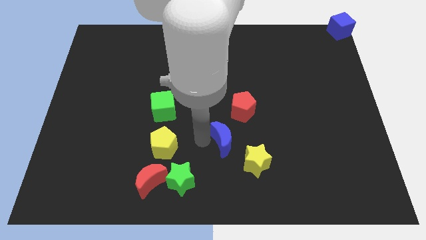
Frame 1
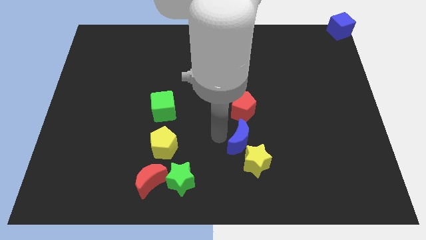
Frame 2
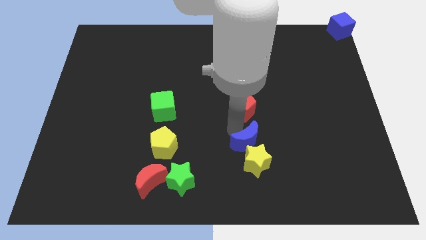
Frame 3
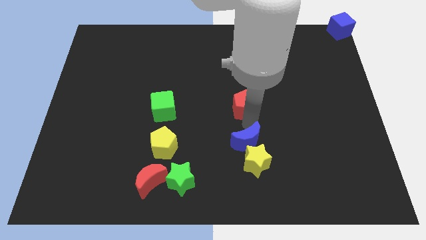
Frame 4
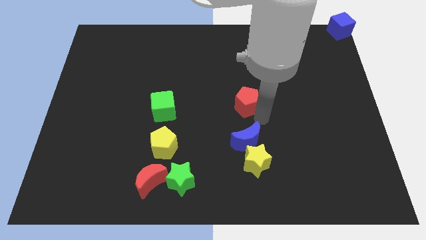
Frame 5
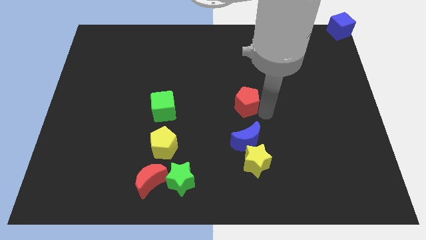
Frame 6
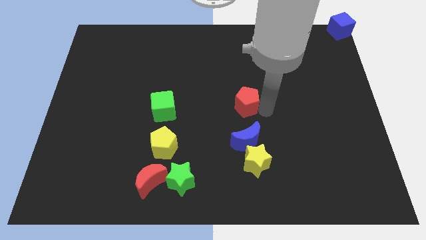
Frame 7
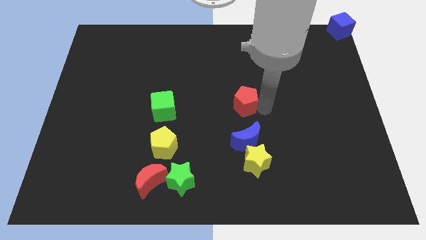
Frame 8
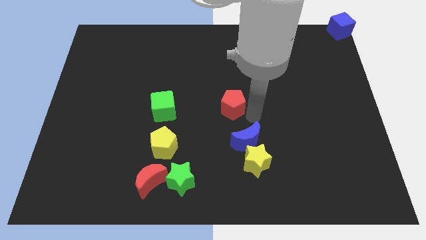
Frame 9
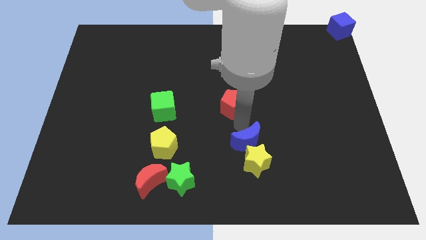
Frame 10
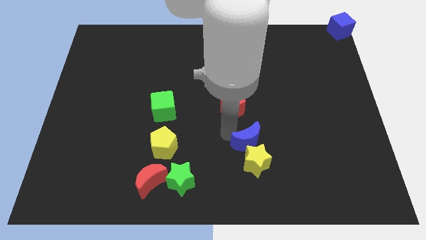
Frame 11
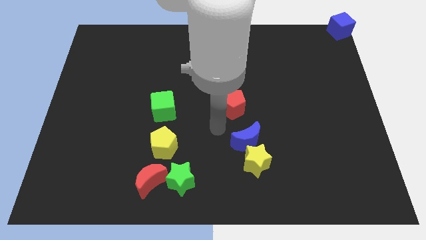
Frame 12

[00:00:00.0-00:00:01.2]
place the blue crescent in between the yellow star and the red pentagon

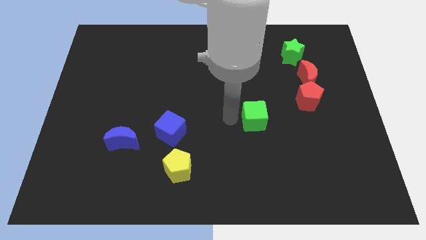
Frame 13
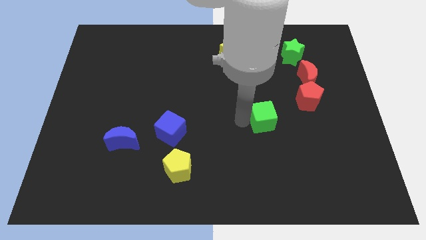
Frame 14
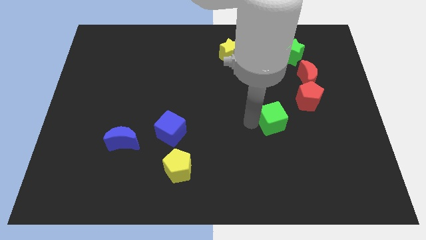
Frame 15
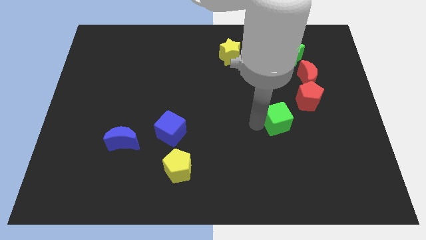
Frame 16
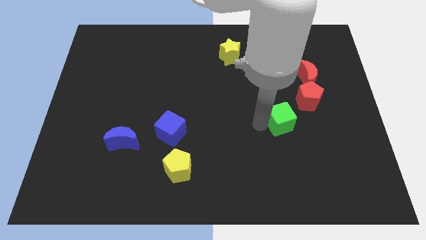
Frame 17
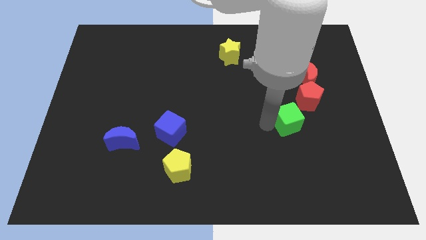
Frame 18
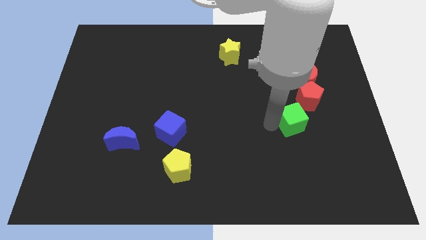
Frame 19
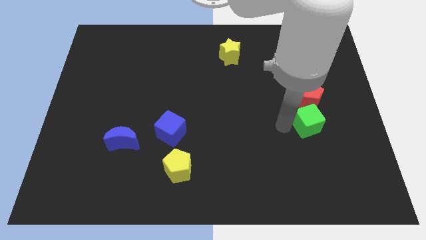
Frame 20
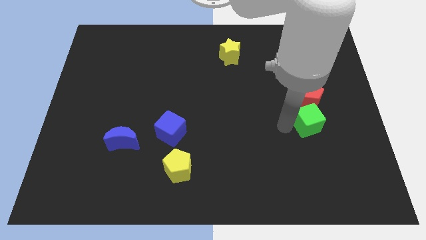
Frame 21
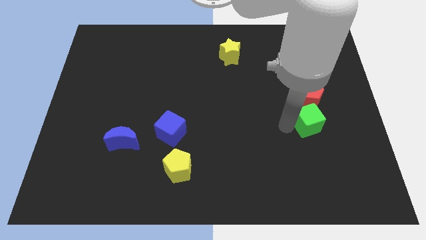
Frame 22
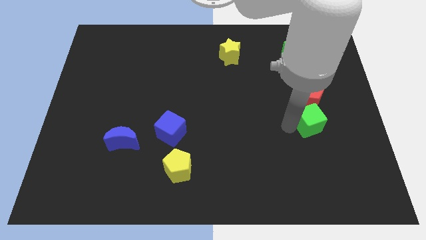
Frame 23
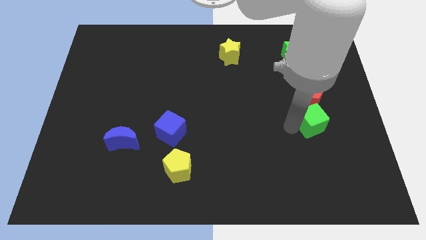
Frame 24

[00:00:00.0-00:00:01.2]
push the green cube bottom of the red pentagon

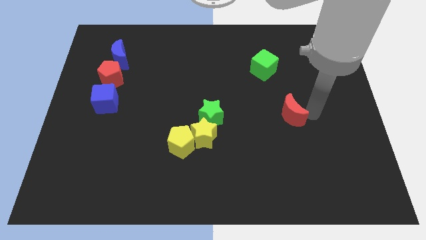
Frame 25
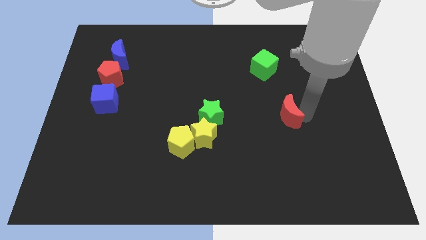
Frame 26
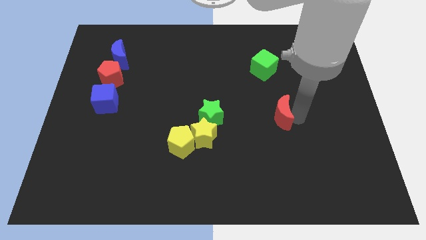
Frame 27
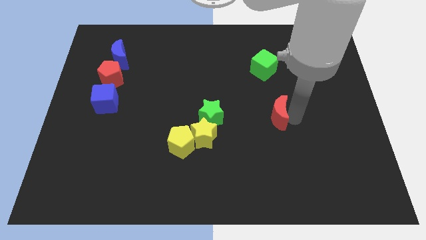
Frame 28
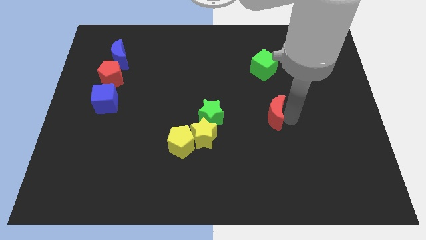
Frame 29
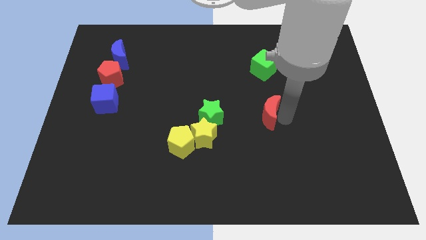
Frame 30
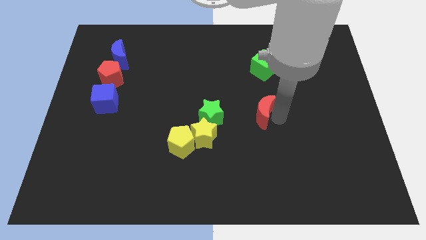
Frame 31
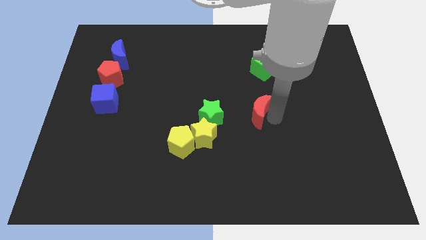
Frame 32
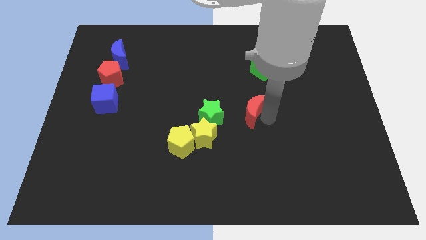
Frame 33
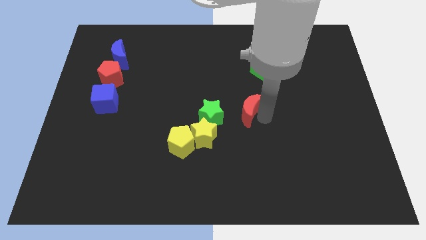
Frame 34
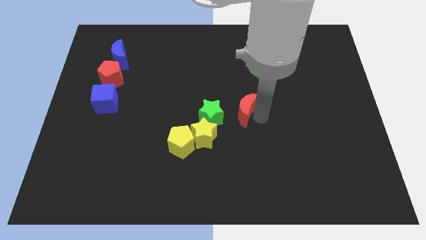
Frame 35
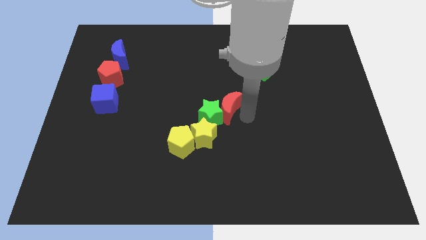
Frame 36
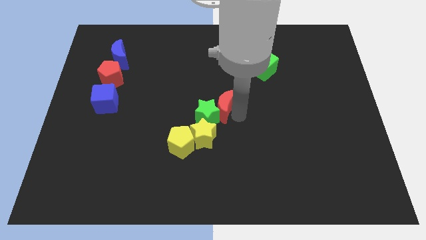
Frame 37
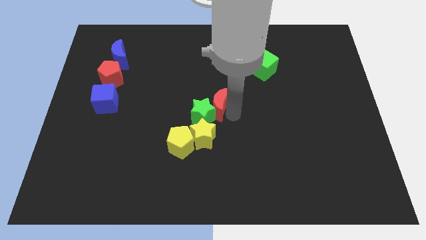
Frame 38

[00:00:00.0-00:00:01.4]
put the red moon diagonally bottom left to the green cube

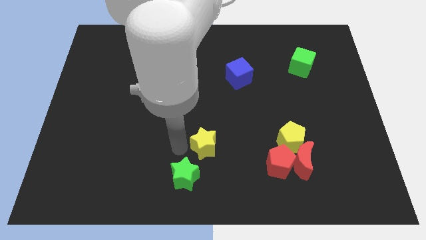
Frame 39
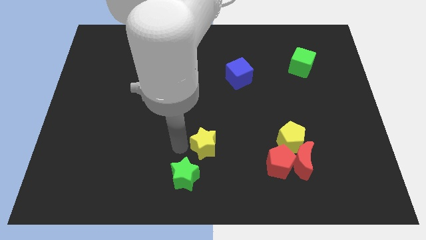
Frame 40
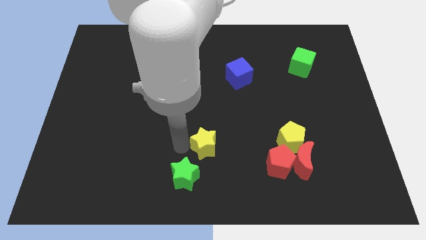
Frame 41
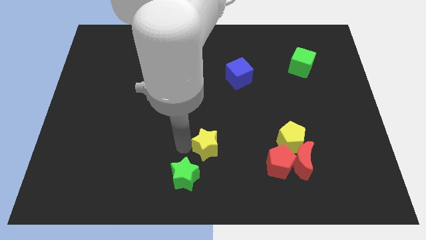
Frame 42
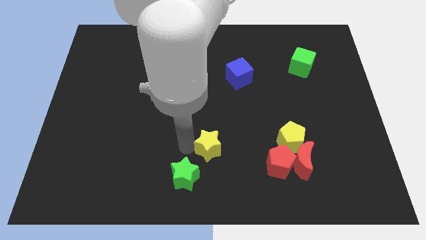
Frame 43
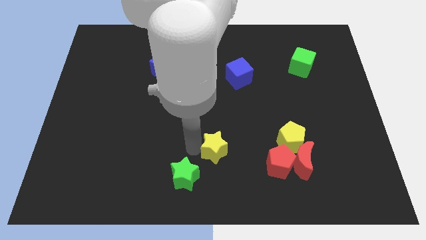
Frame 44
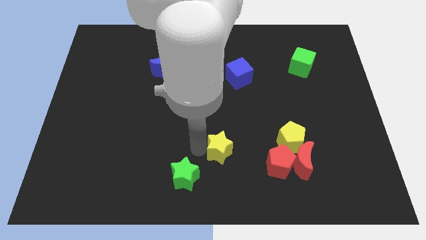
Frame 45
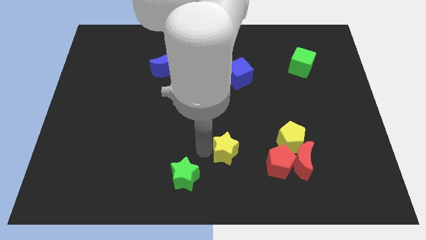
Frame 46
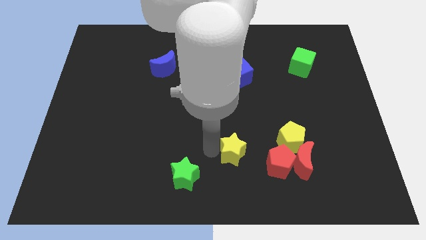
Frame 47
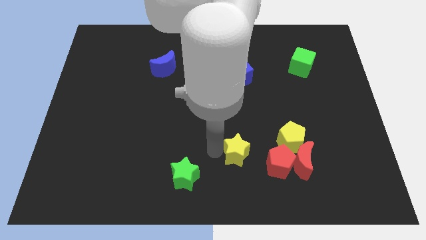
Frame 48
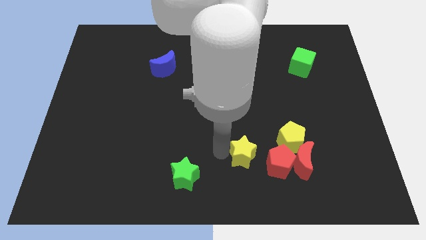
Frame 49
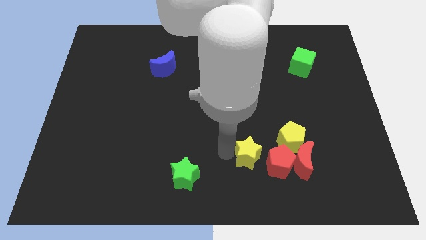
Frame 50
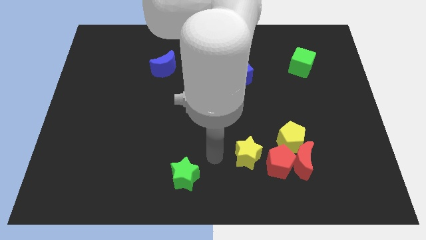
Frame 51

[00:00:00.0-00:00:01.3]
push the yellow star towards the red pentagon

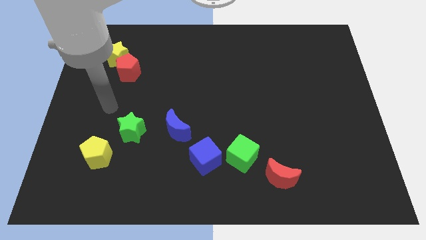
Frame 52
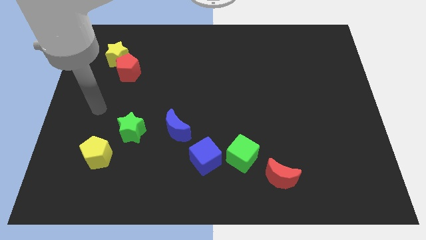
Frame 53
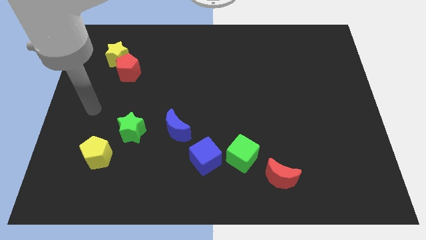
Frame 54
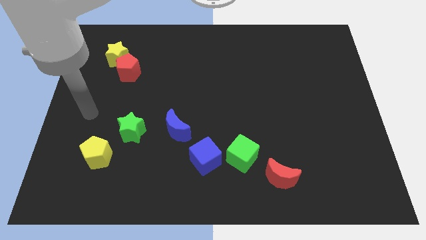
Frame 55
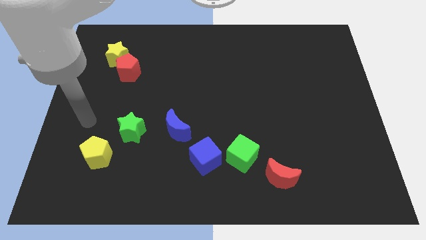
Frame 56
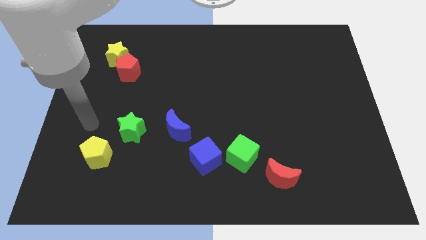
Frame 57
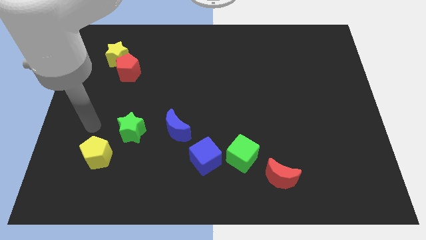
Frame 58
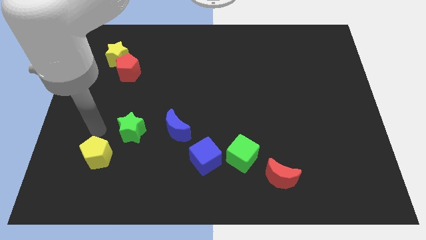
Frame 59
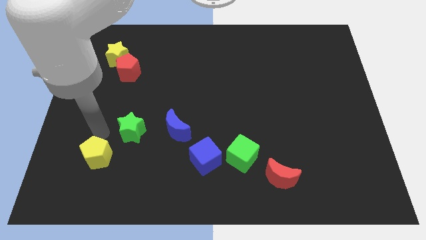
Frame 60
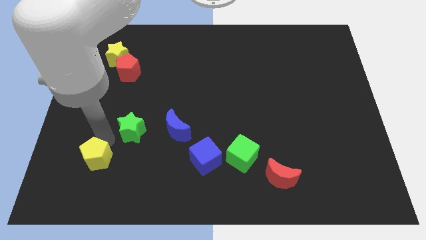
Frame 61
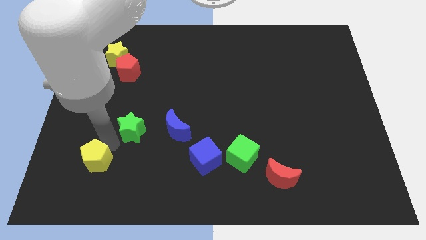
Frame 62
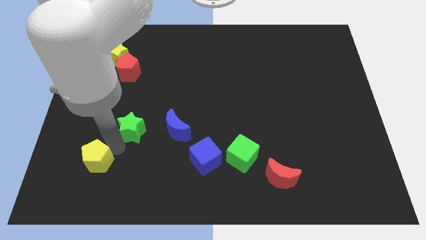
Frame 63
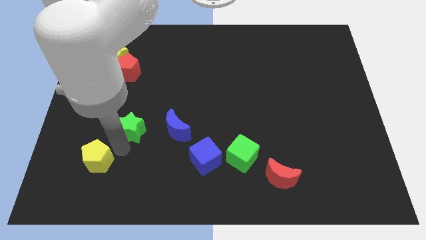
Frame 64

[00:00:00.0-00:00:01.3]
tap the top side of the yellow pentagon

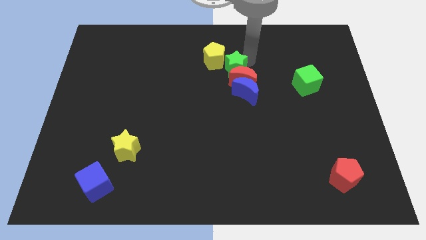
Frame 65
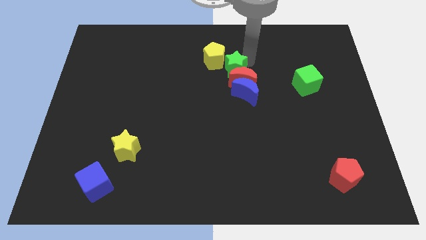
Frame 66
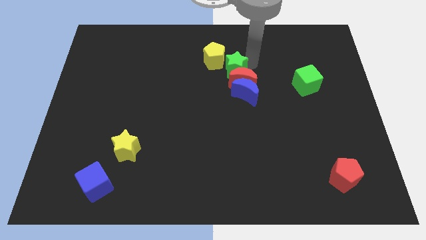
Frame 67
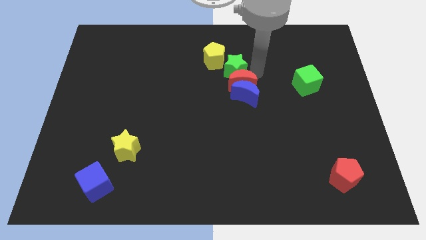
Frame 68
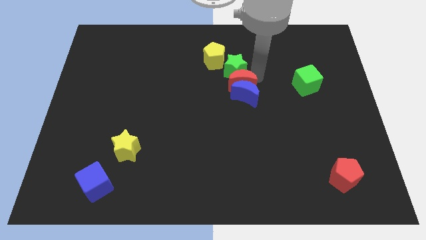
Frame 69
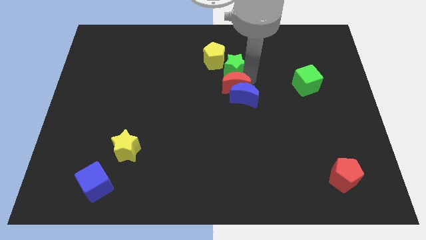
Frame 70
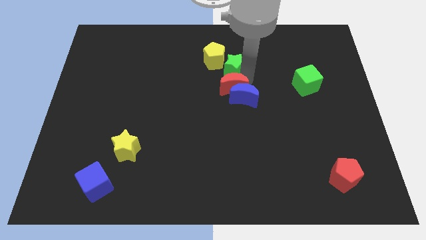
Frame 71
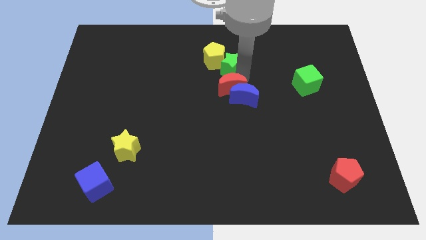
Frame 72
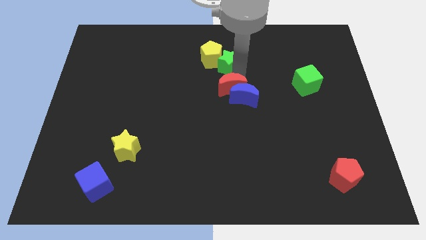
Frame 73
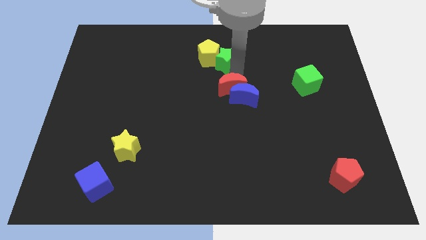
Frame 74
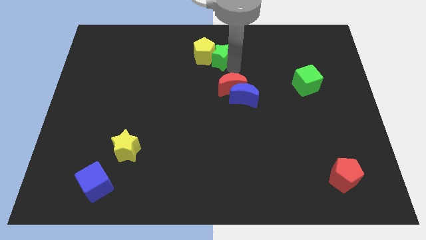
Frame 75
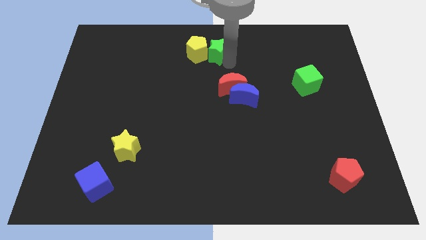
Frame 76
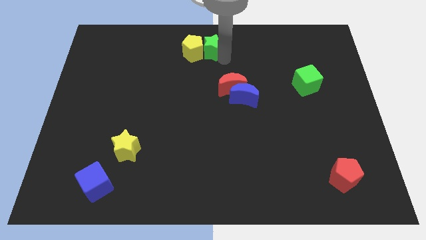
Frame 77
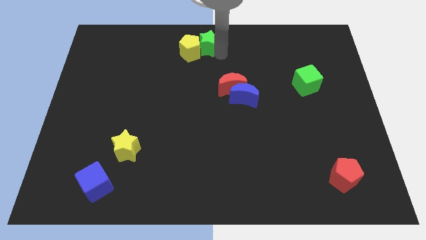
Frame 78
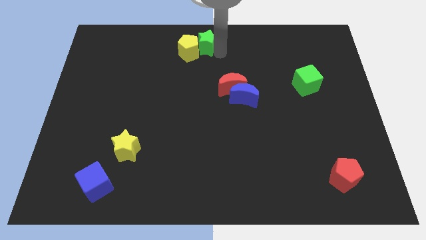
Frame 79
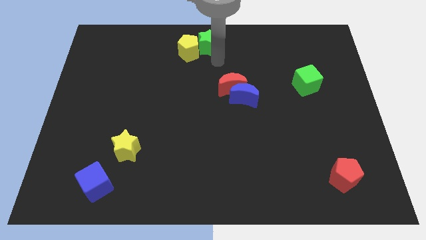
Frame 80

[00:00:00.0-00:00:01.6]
push the green star into the yellow pentagon

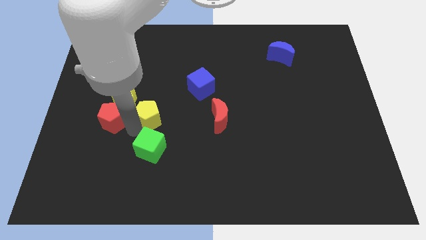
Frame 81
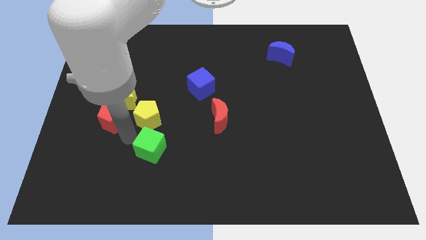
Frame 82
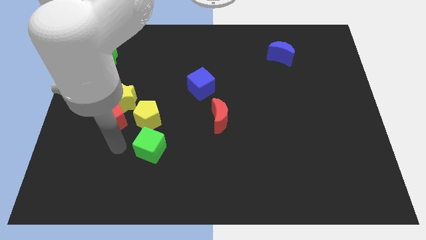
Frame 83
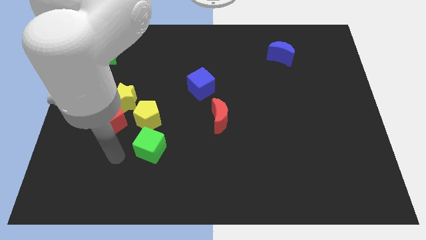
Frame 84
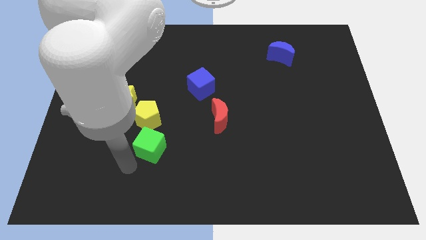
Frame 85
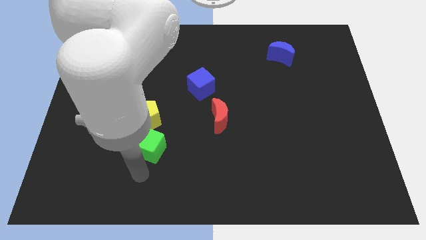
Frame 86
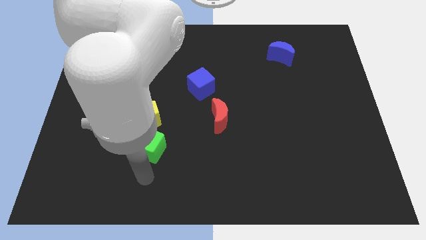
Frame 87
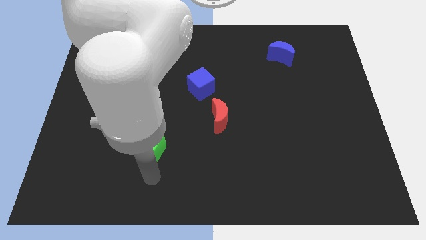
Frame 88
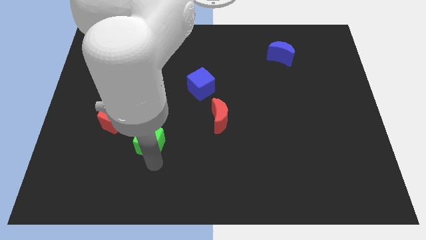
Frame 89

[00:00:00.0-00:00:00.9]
move your arm away from yellow pentagon
